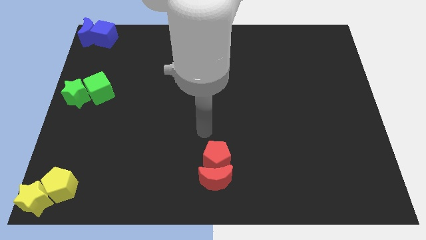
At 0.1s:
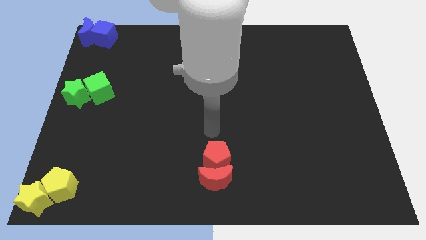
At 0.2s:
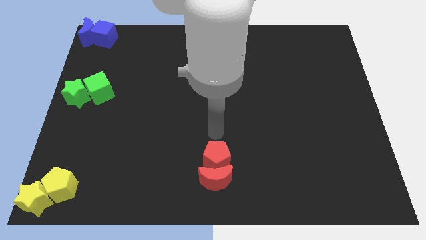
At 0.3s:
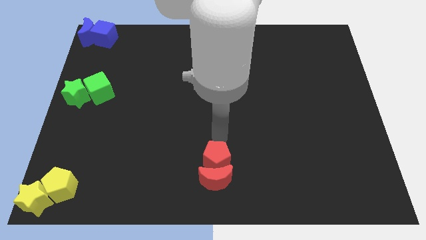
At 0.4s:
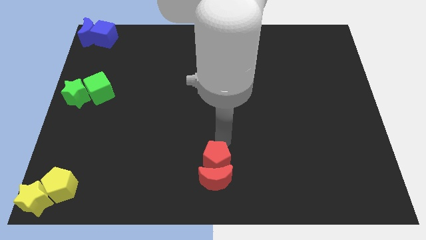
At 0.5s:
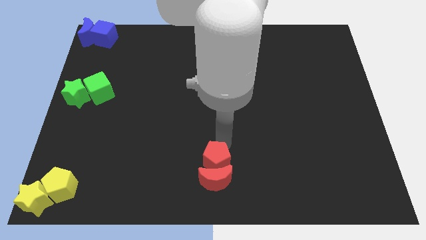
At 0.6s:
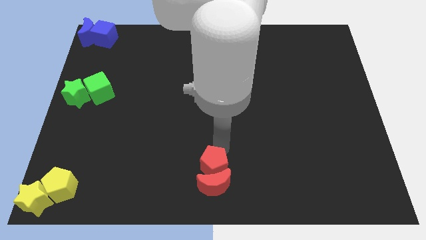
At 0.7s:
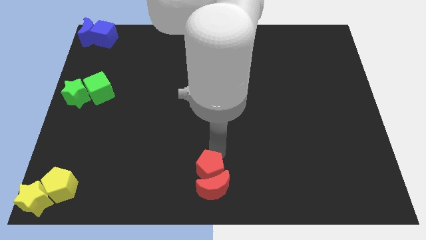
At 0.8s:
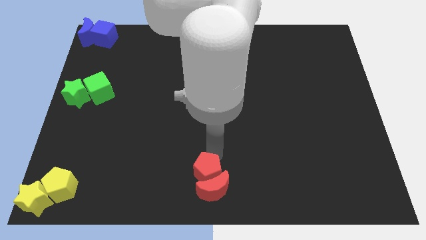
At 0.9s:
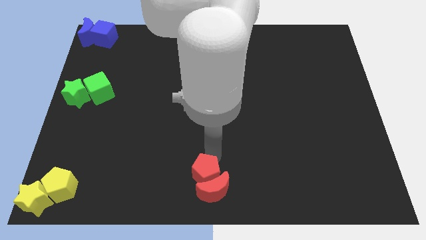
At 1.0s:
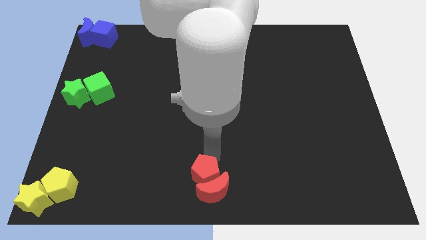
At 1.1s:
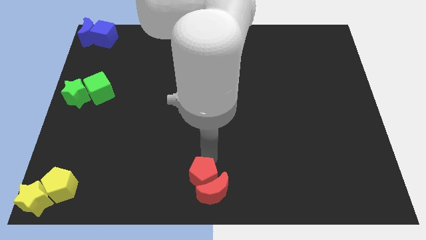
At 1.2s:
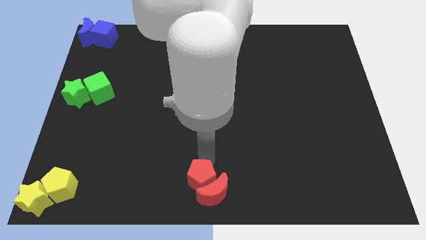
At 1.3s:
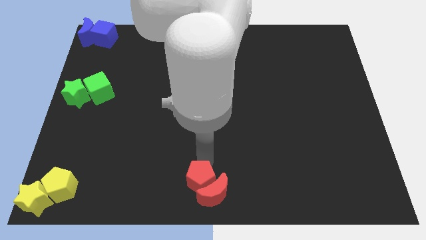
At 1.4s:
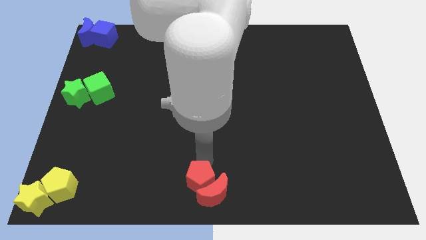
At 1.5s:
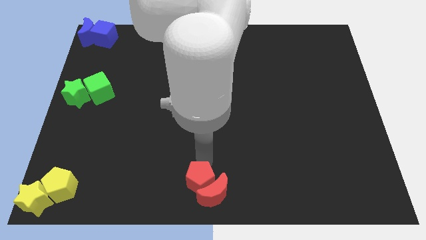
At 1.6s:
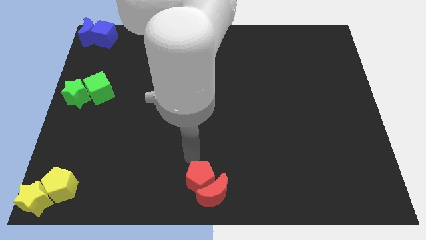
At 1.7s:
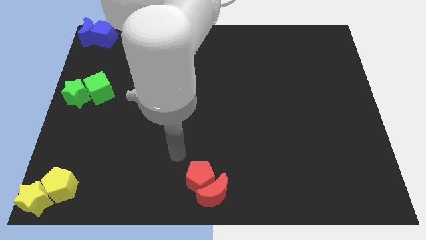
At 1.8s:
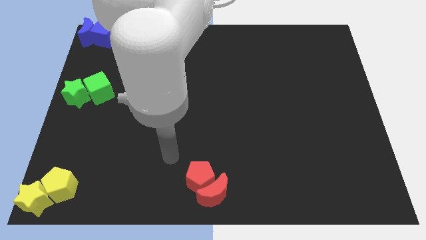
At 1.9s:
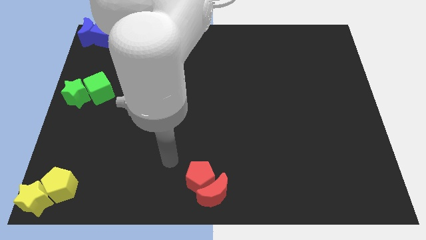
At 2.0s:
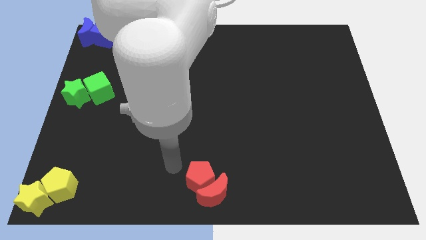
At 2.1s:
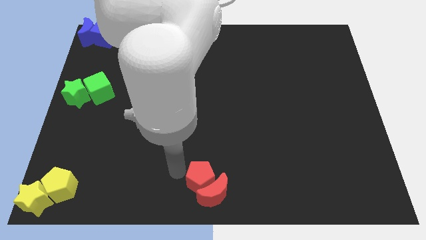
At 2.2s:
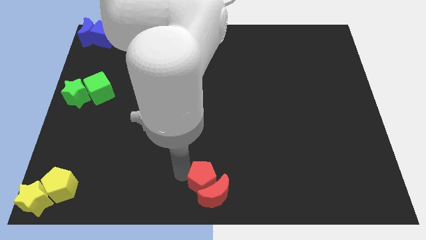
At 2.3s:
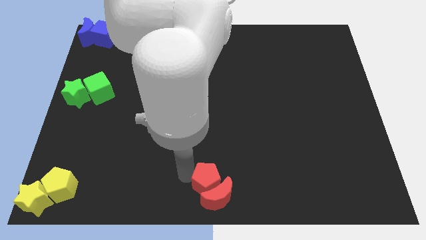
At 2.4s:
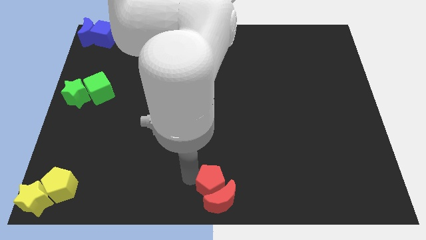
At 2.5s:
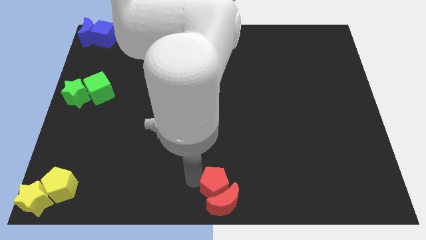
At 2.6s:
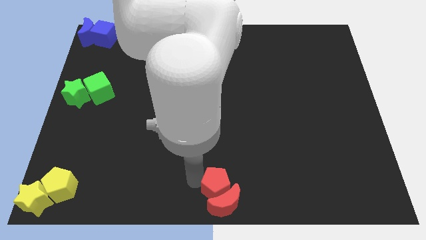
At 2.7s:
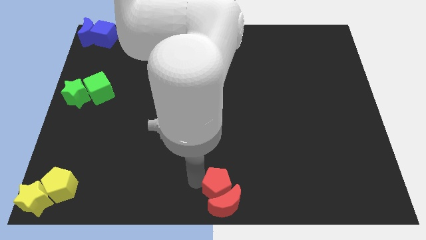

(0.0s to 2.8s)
put the red blocks at the bottom center of the board

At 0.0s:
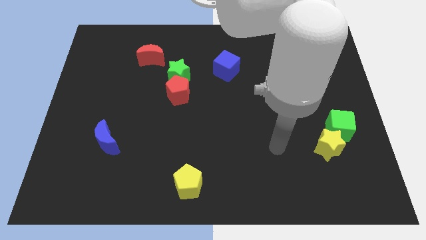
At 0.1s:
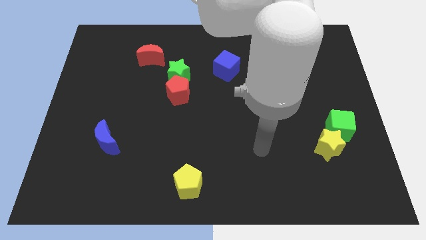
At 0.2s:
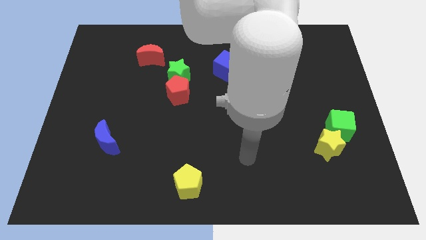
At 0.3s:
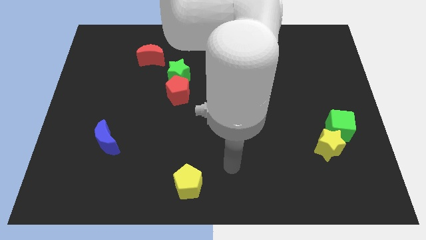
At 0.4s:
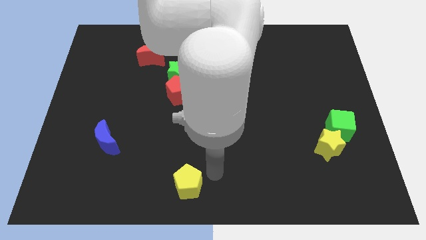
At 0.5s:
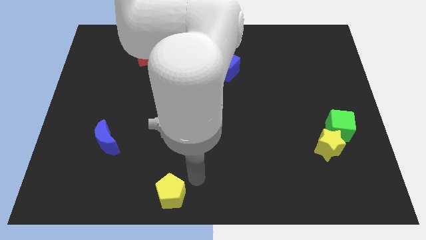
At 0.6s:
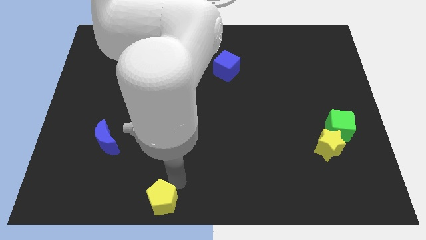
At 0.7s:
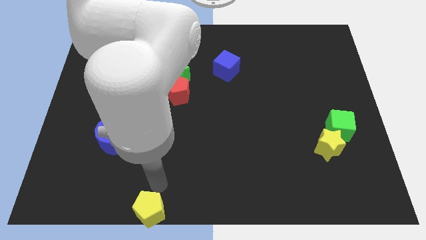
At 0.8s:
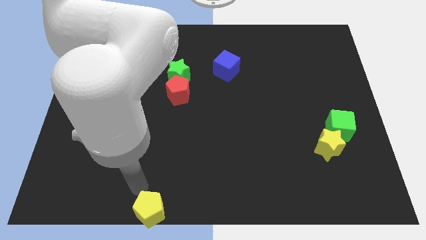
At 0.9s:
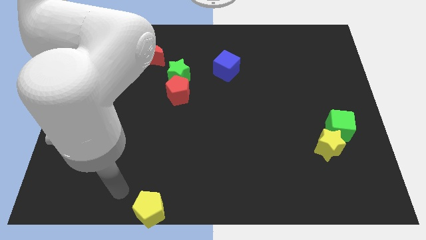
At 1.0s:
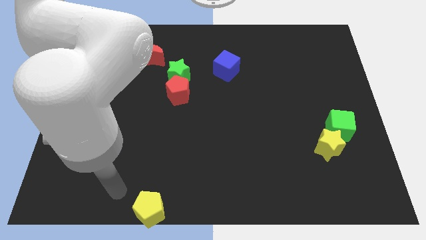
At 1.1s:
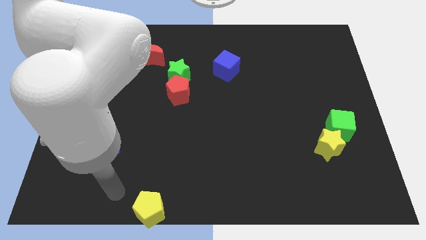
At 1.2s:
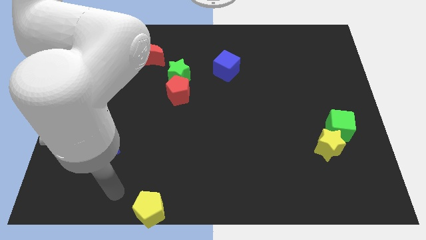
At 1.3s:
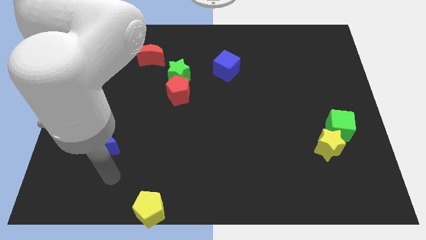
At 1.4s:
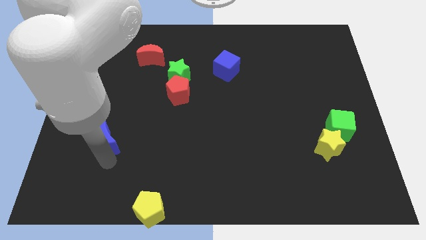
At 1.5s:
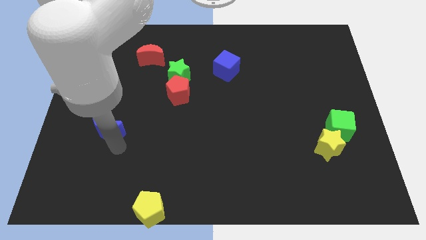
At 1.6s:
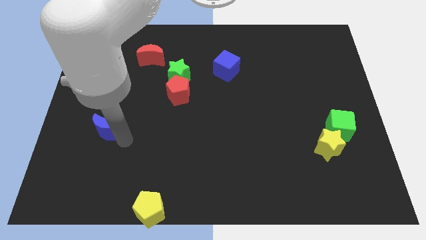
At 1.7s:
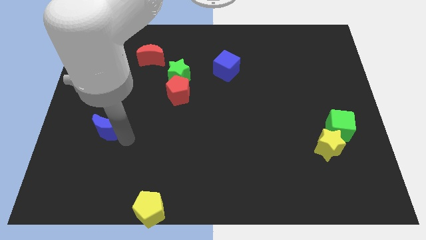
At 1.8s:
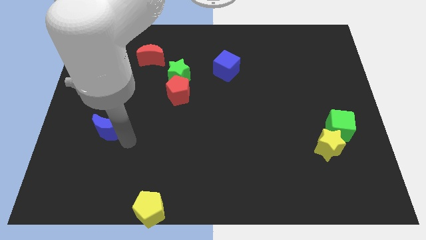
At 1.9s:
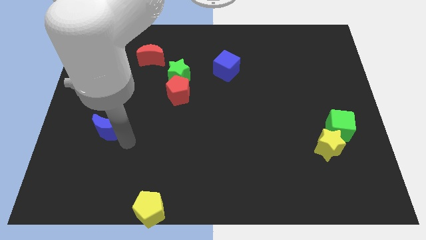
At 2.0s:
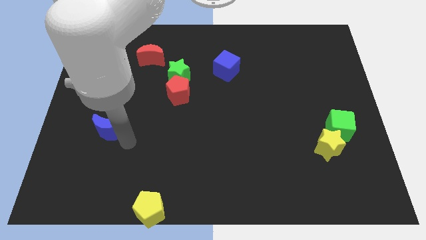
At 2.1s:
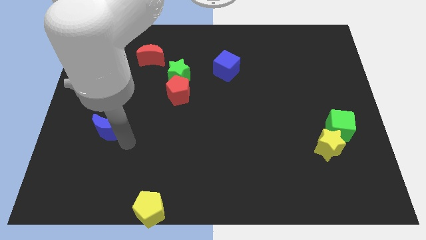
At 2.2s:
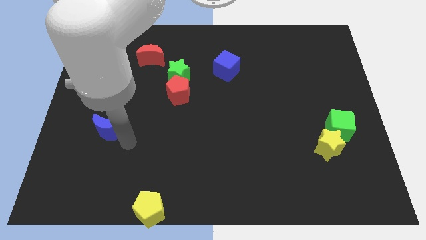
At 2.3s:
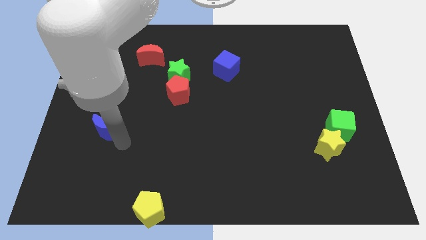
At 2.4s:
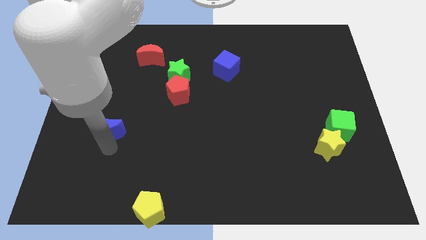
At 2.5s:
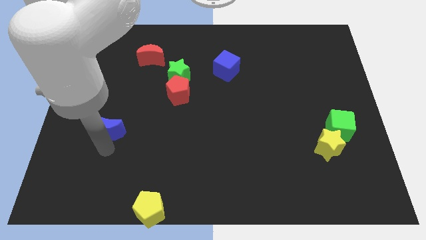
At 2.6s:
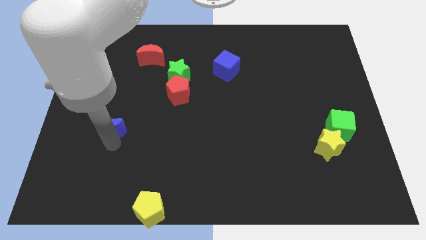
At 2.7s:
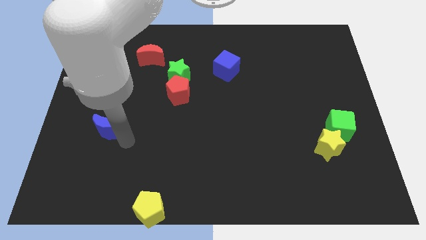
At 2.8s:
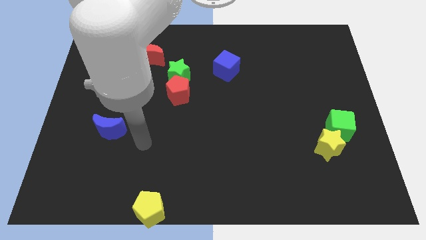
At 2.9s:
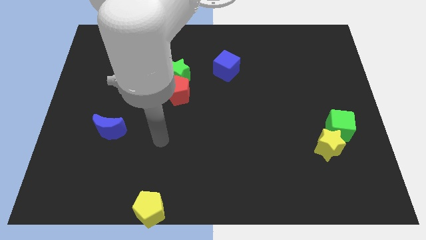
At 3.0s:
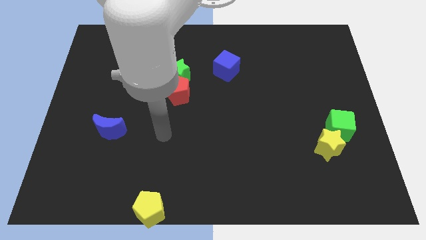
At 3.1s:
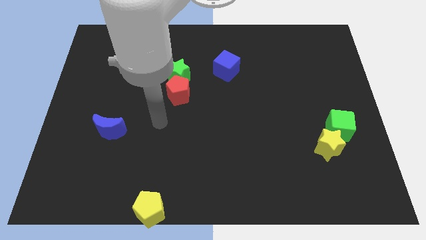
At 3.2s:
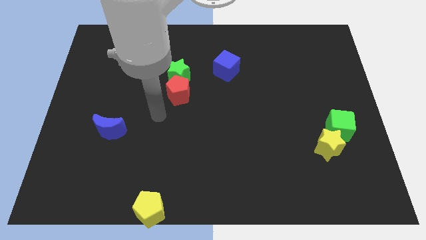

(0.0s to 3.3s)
move the yellow pentagon to the bottom center

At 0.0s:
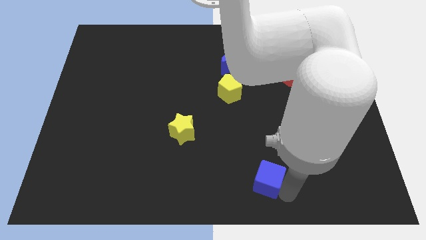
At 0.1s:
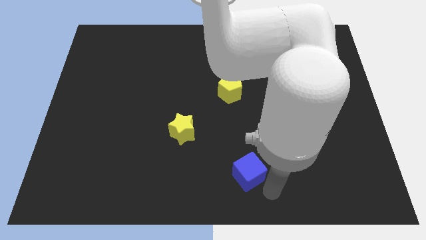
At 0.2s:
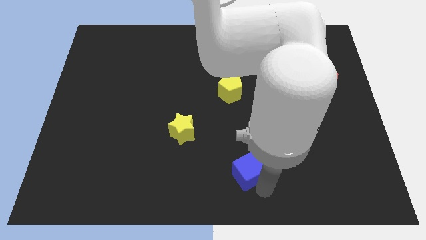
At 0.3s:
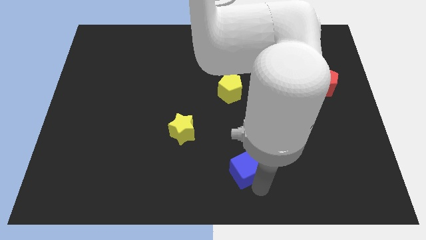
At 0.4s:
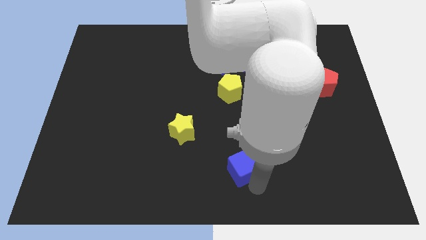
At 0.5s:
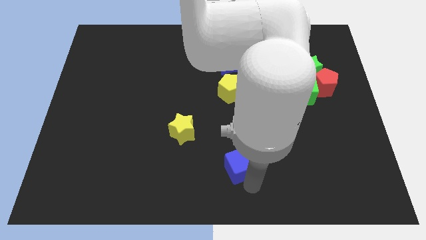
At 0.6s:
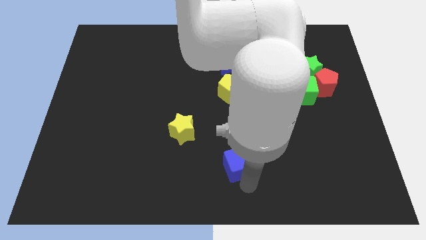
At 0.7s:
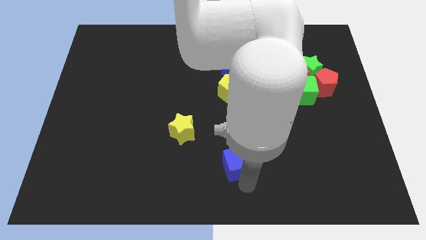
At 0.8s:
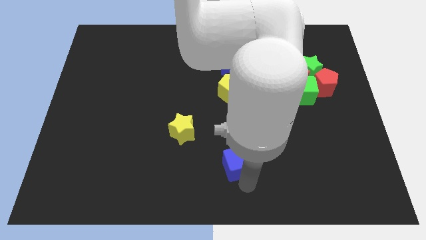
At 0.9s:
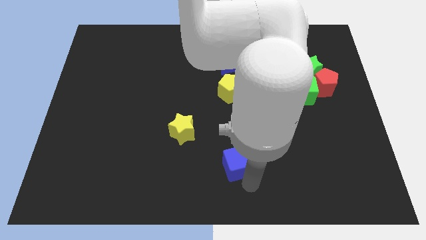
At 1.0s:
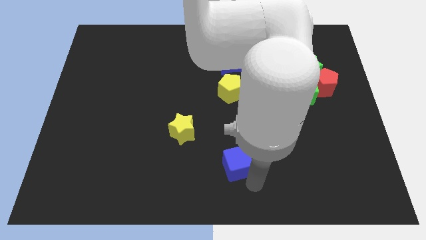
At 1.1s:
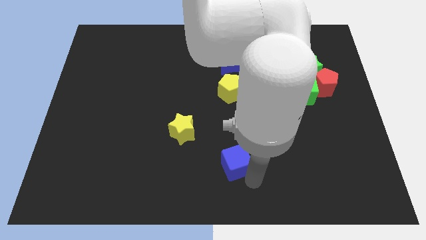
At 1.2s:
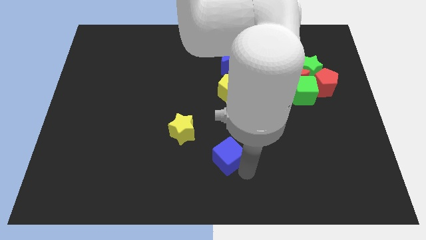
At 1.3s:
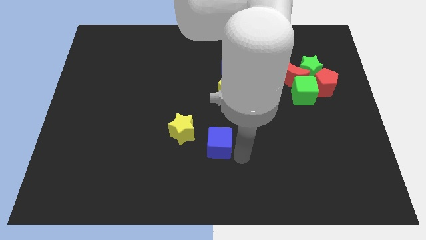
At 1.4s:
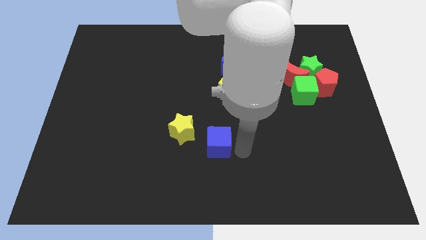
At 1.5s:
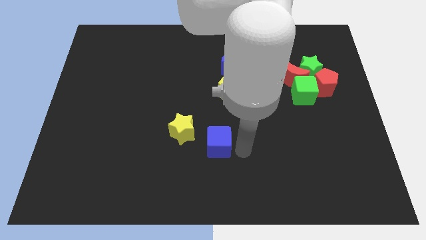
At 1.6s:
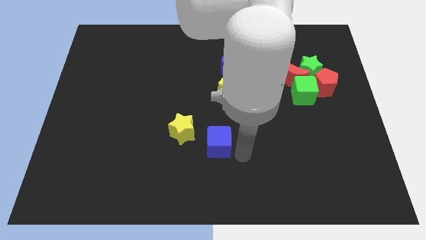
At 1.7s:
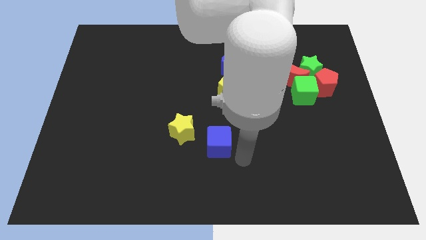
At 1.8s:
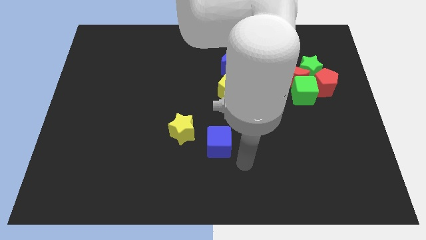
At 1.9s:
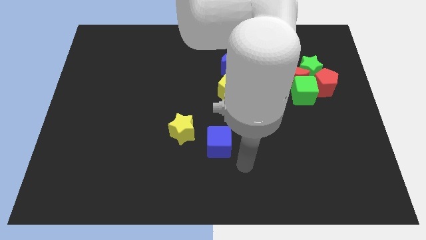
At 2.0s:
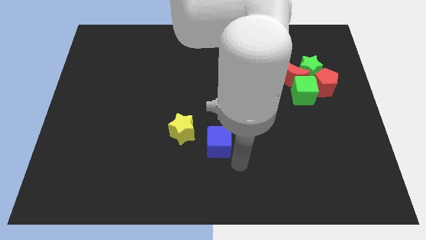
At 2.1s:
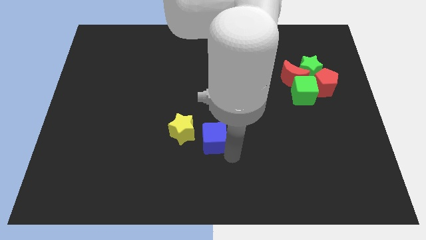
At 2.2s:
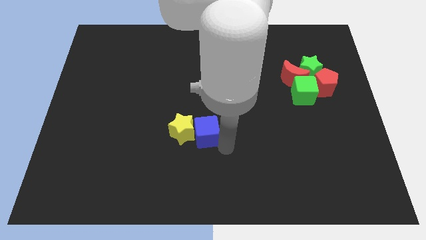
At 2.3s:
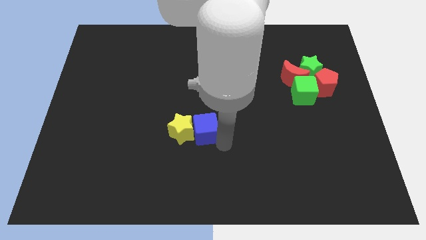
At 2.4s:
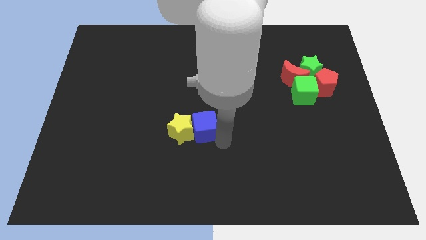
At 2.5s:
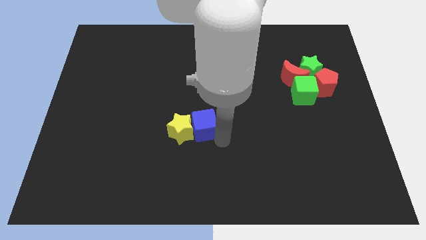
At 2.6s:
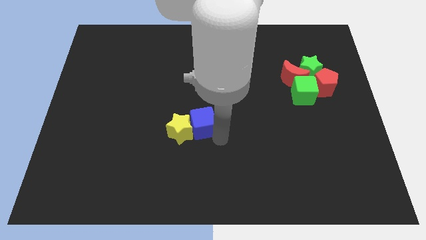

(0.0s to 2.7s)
push blue cube into yellow star

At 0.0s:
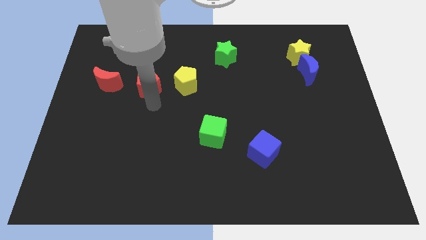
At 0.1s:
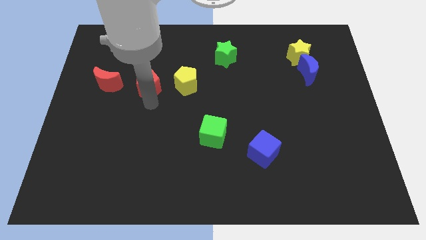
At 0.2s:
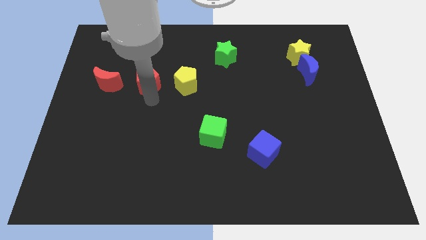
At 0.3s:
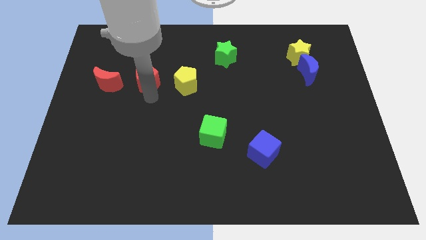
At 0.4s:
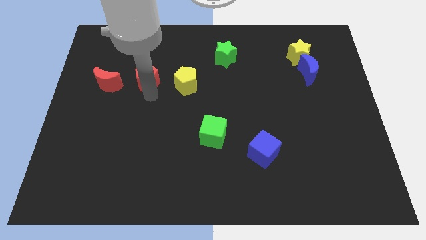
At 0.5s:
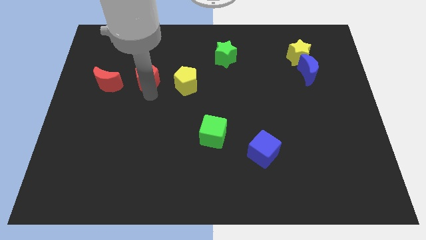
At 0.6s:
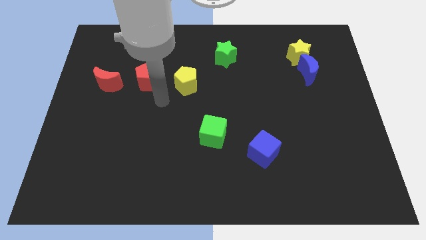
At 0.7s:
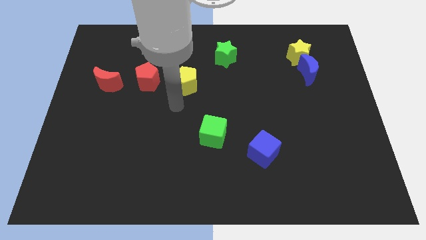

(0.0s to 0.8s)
slightly move the red pentagon left to the yellow pentagon
